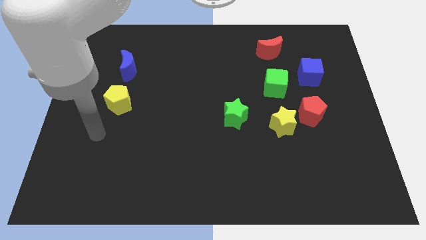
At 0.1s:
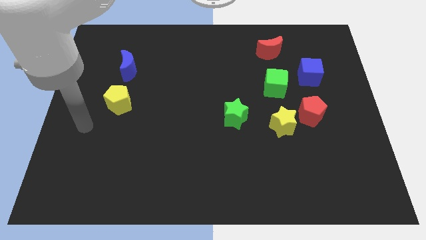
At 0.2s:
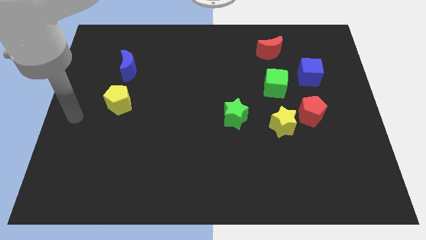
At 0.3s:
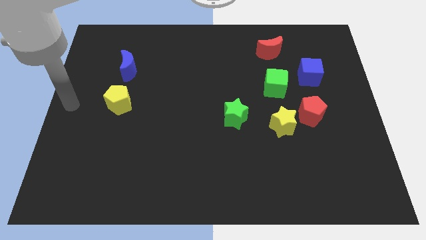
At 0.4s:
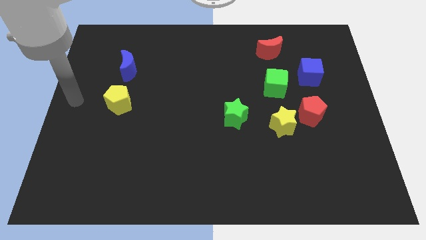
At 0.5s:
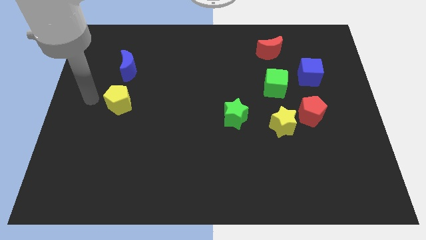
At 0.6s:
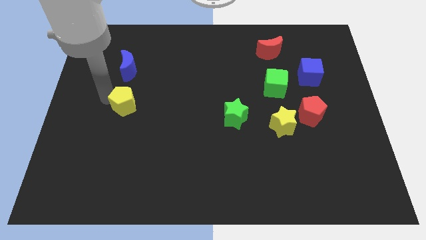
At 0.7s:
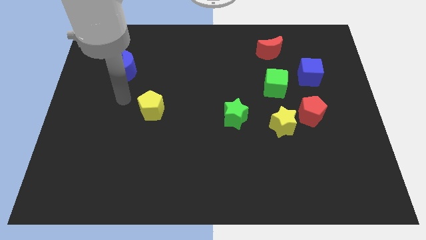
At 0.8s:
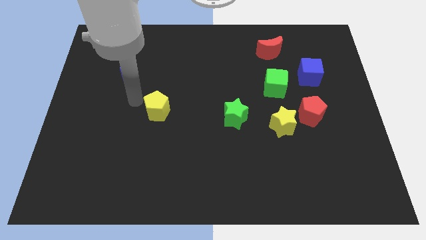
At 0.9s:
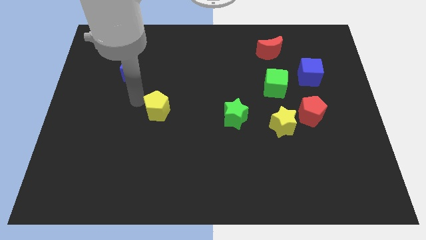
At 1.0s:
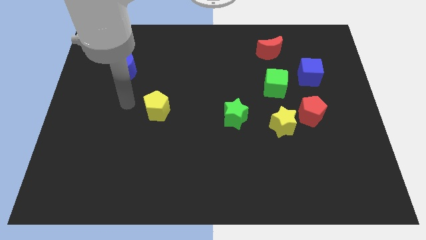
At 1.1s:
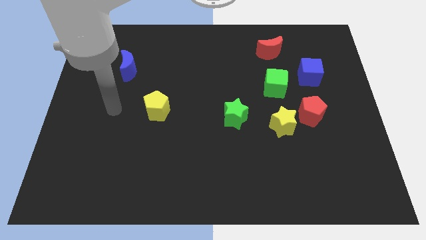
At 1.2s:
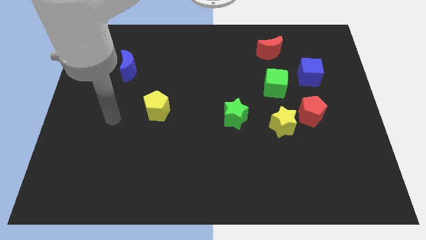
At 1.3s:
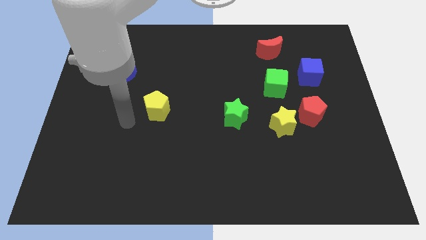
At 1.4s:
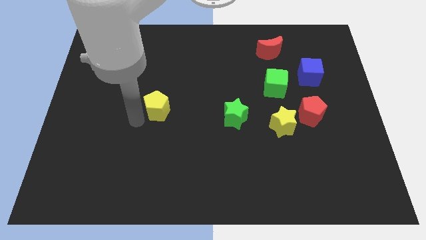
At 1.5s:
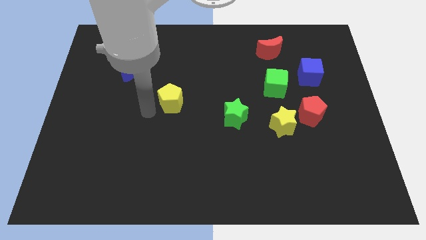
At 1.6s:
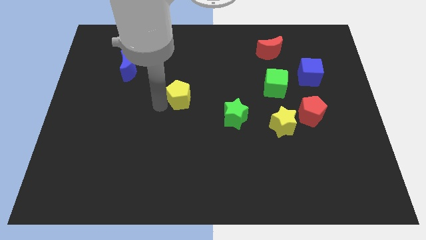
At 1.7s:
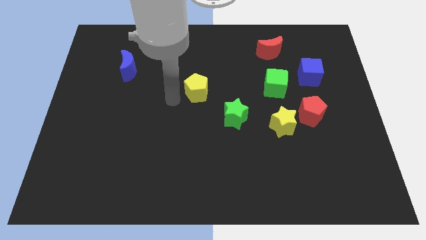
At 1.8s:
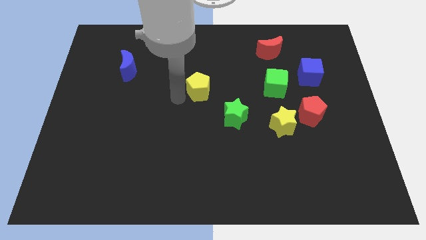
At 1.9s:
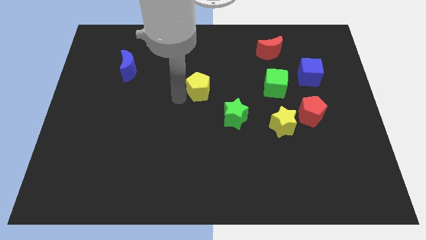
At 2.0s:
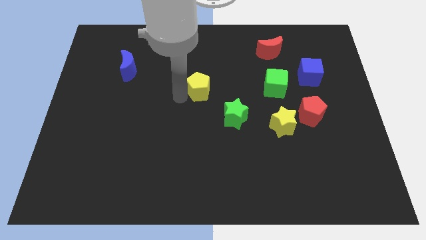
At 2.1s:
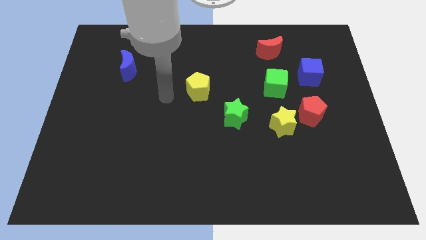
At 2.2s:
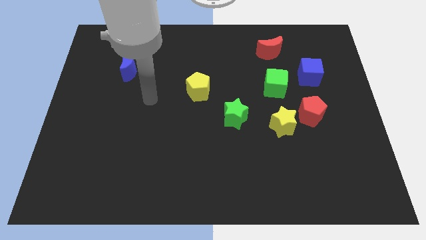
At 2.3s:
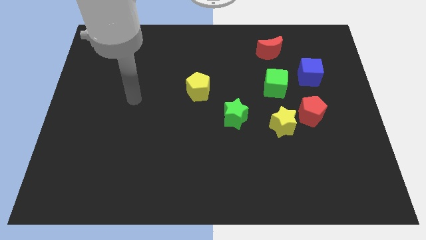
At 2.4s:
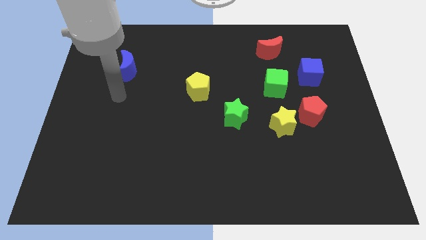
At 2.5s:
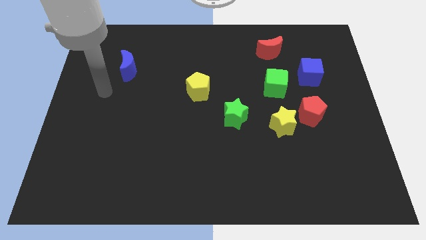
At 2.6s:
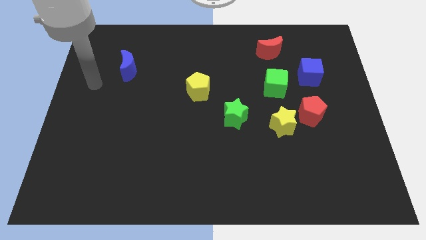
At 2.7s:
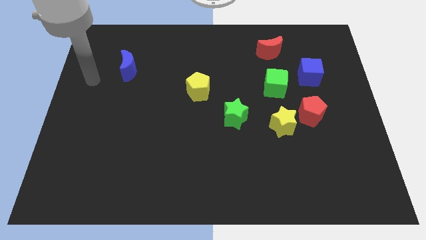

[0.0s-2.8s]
move the yellow pentagon to the center

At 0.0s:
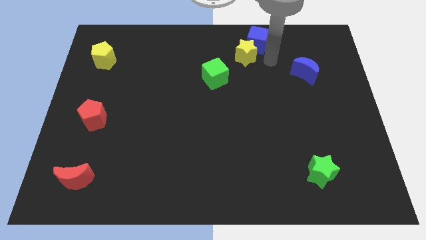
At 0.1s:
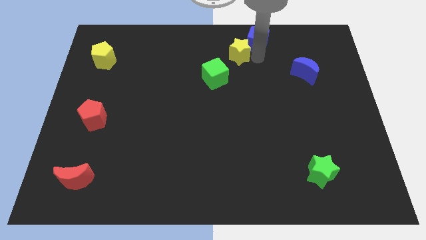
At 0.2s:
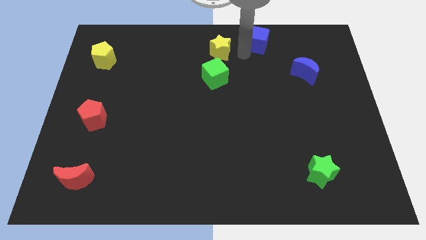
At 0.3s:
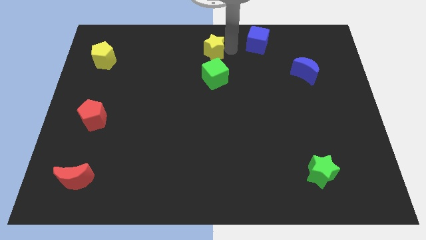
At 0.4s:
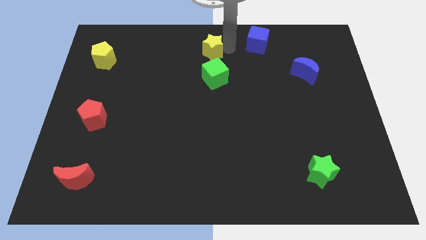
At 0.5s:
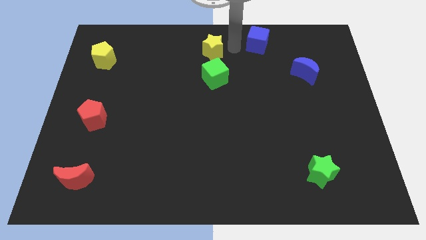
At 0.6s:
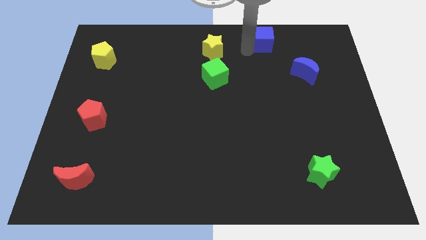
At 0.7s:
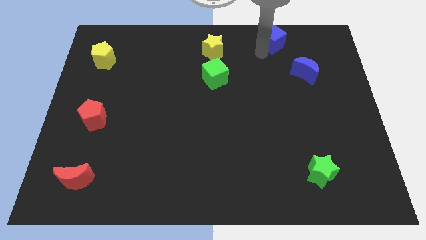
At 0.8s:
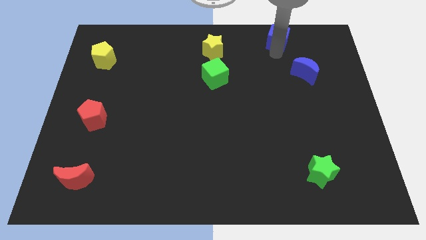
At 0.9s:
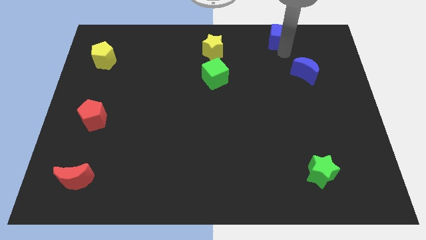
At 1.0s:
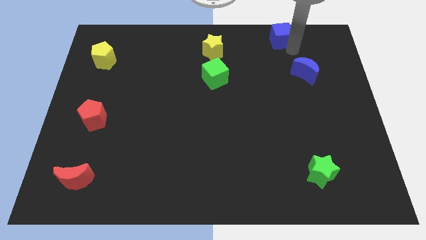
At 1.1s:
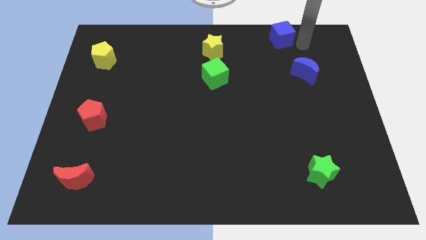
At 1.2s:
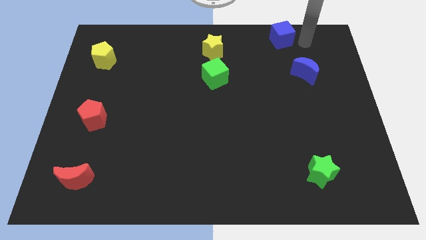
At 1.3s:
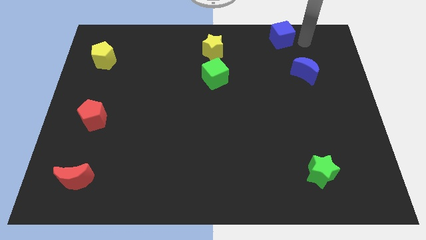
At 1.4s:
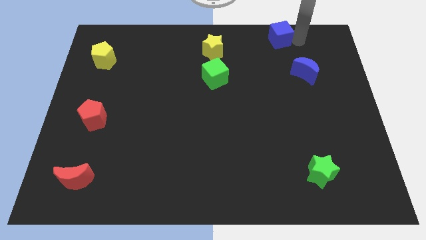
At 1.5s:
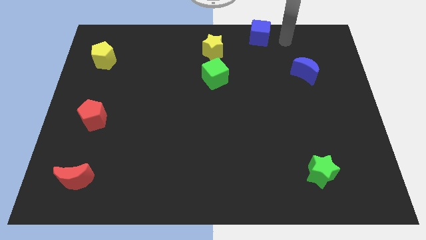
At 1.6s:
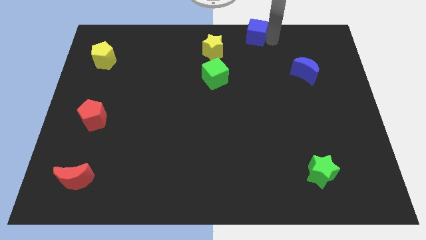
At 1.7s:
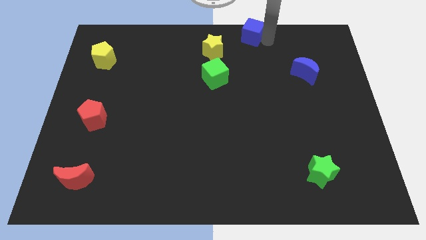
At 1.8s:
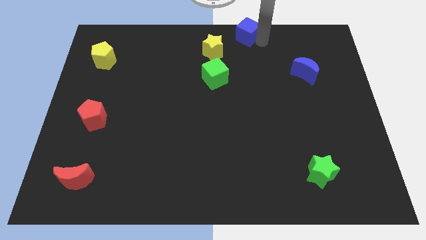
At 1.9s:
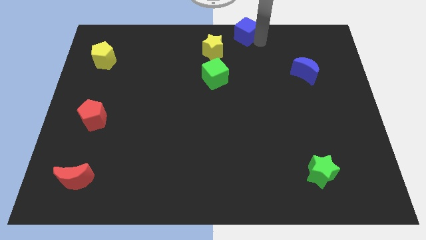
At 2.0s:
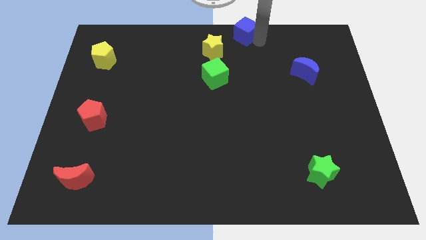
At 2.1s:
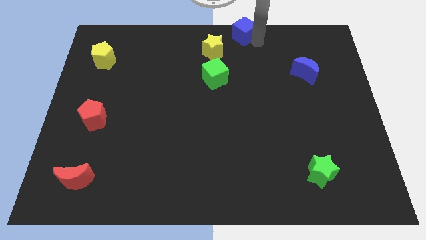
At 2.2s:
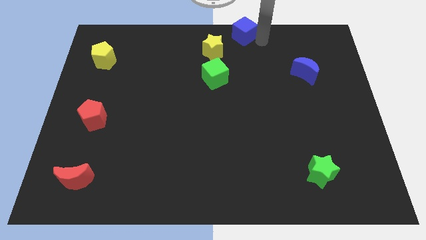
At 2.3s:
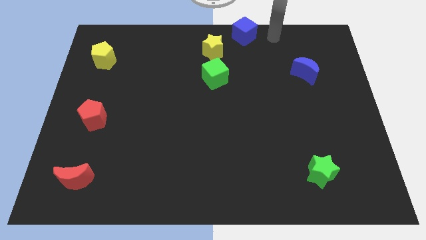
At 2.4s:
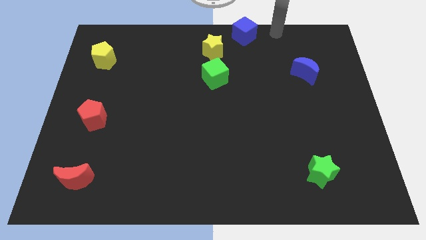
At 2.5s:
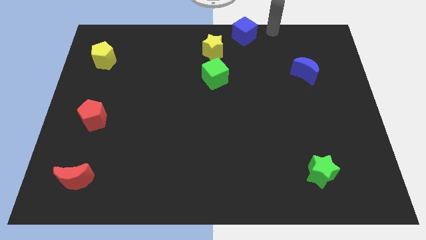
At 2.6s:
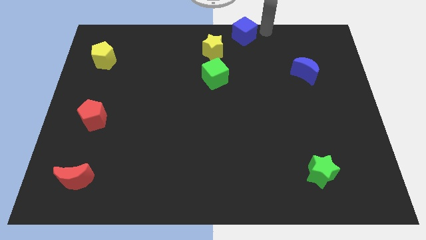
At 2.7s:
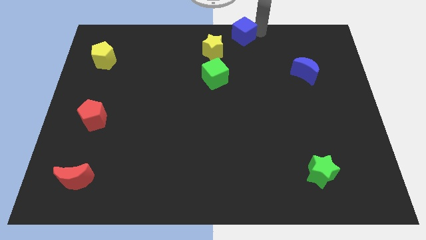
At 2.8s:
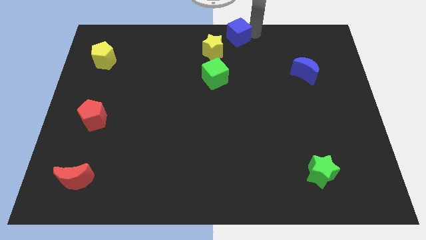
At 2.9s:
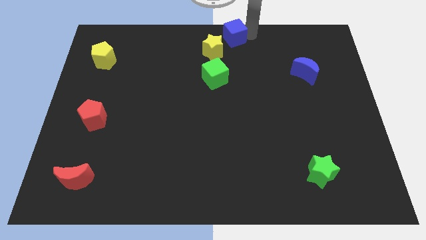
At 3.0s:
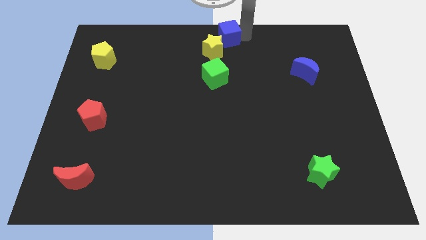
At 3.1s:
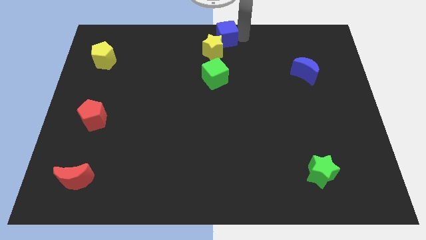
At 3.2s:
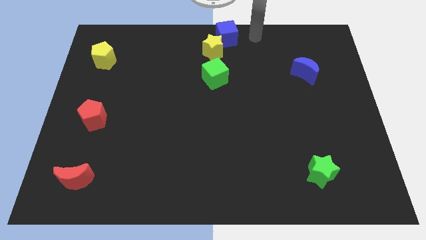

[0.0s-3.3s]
push blue cube slightly top right of the yellow star

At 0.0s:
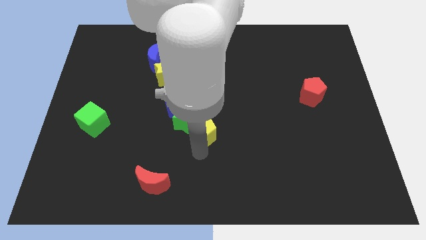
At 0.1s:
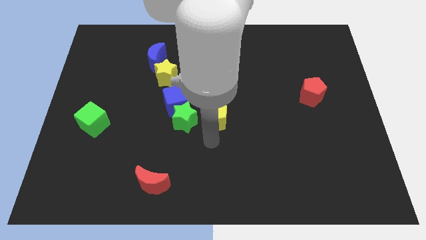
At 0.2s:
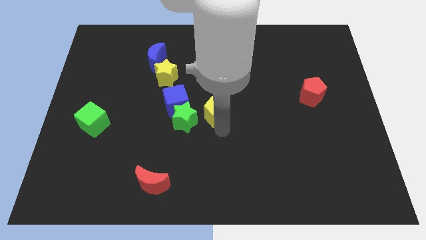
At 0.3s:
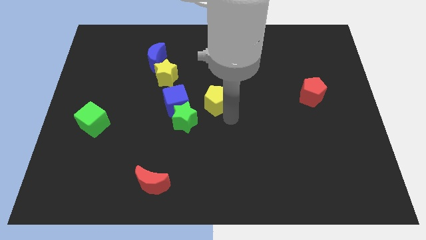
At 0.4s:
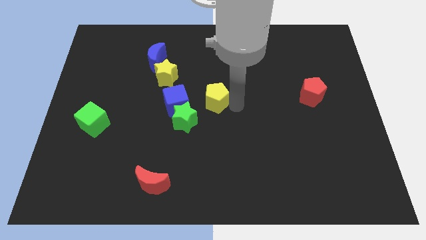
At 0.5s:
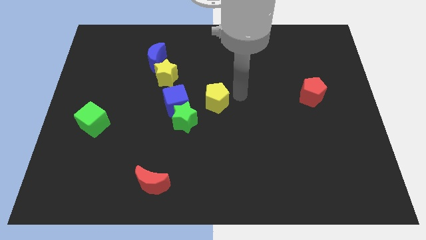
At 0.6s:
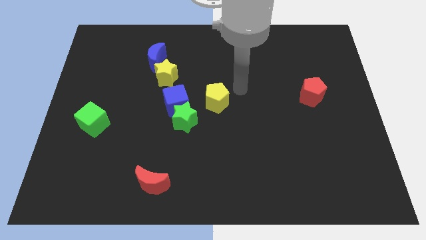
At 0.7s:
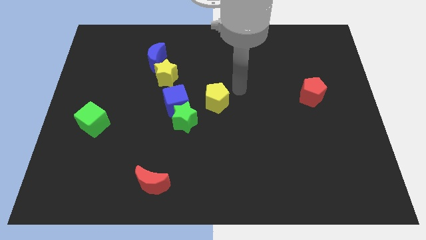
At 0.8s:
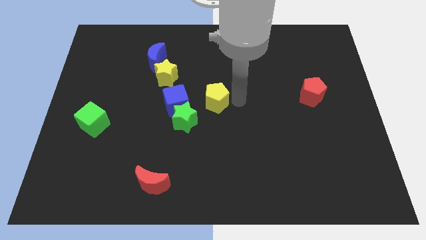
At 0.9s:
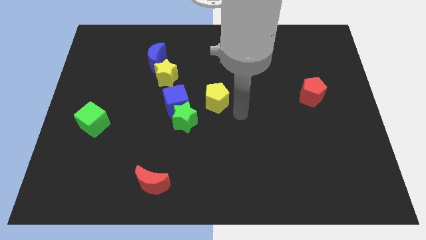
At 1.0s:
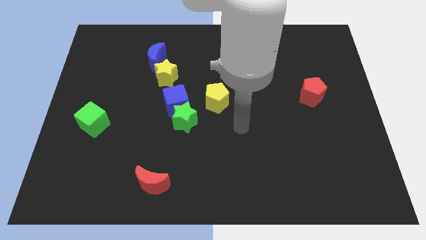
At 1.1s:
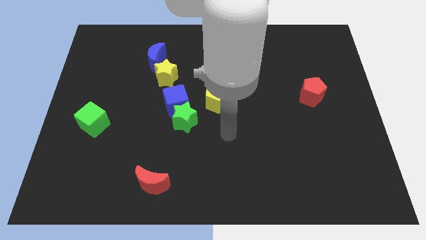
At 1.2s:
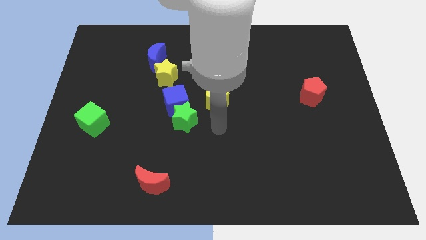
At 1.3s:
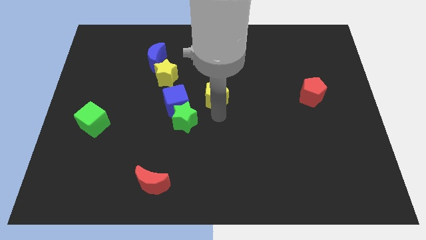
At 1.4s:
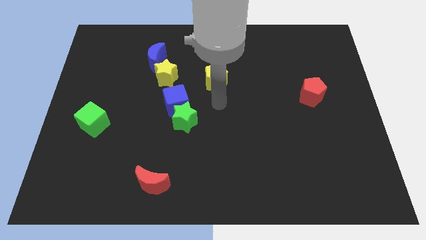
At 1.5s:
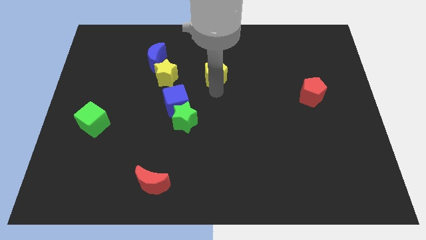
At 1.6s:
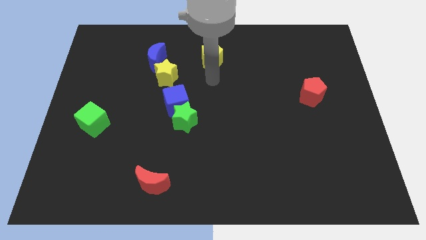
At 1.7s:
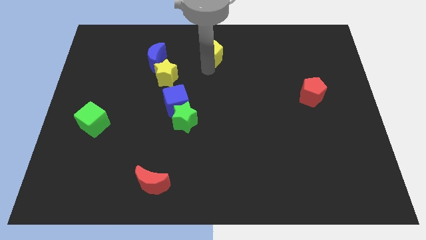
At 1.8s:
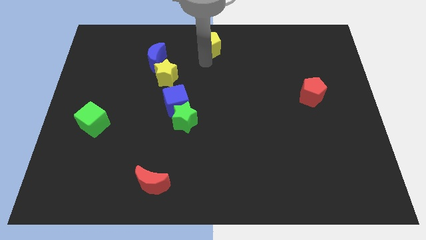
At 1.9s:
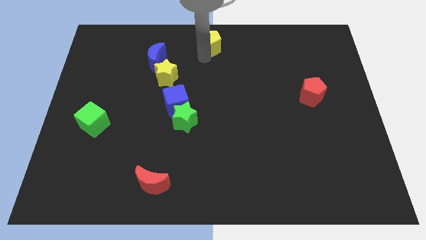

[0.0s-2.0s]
separate yellow pentagon from green star

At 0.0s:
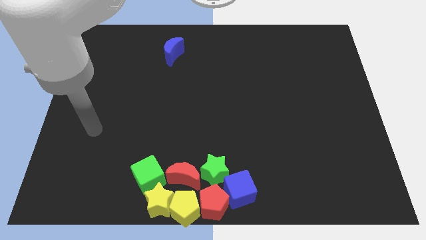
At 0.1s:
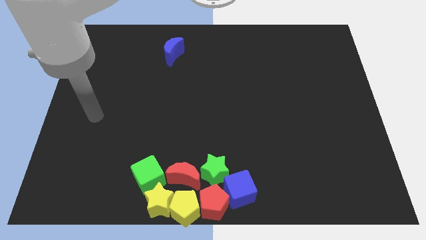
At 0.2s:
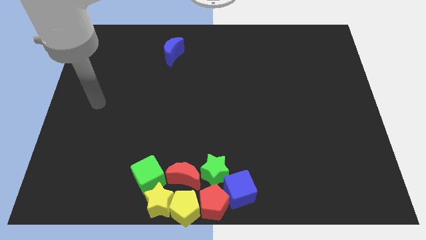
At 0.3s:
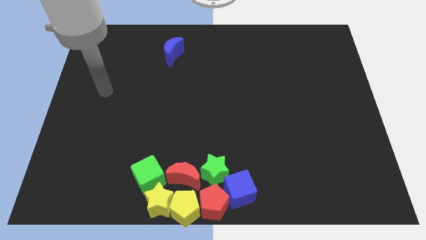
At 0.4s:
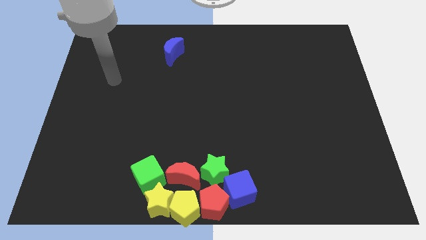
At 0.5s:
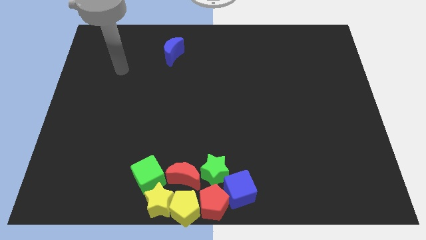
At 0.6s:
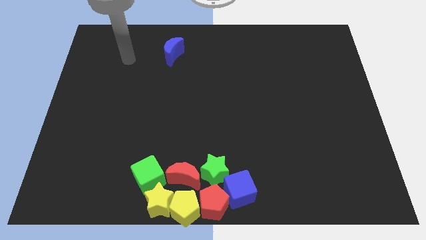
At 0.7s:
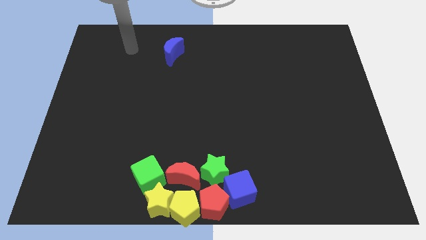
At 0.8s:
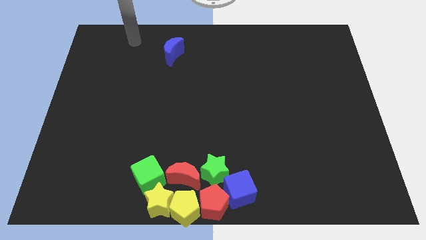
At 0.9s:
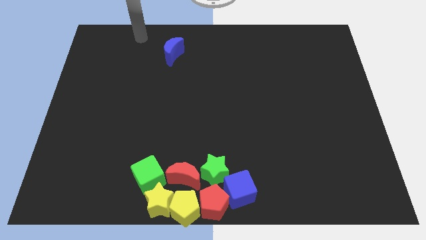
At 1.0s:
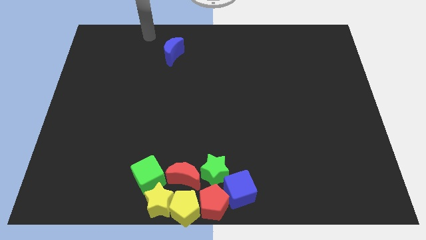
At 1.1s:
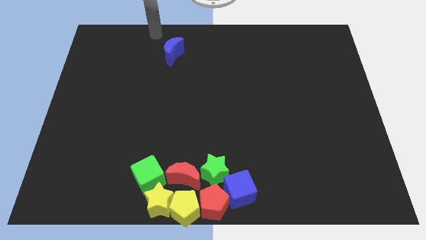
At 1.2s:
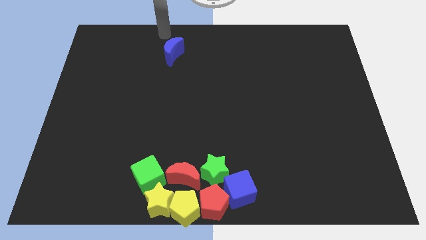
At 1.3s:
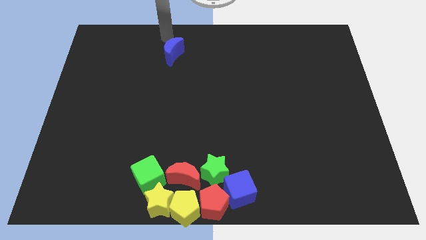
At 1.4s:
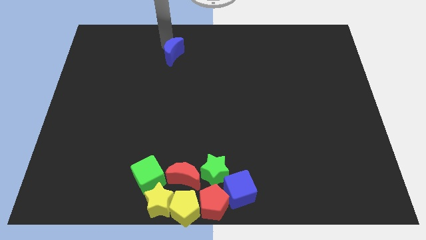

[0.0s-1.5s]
place the arm above the blue cube at the top center of board
